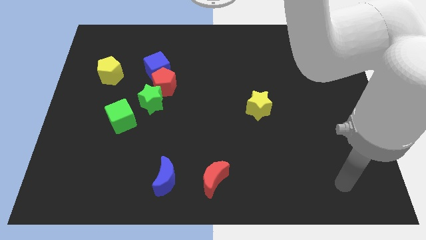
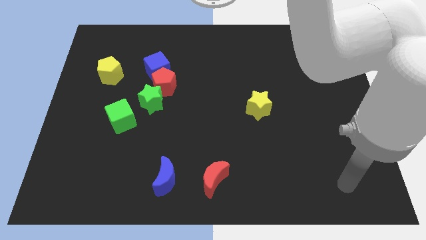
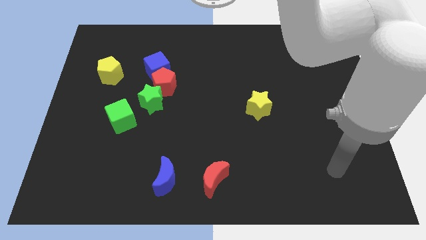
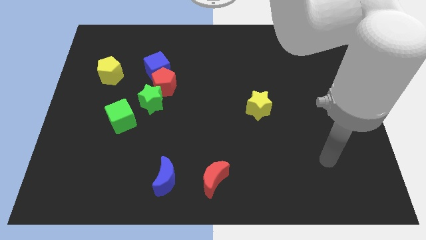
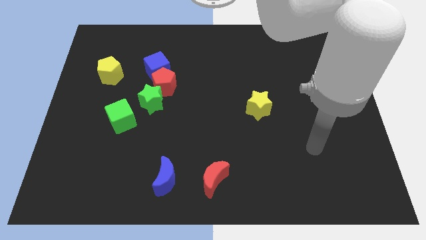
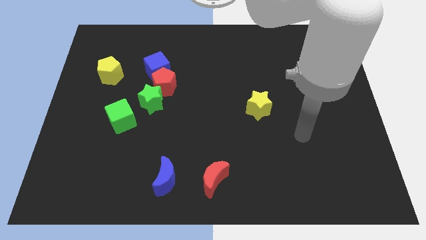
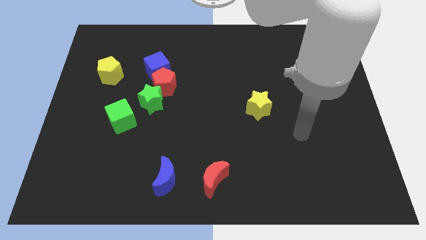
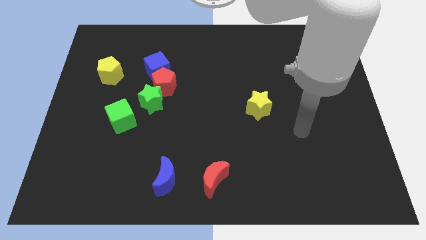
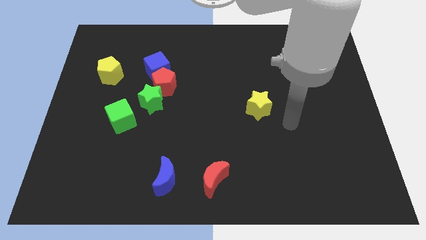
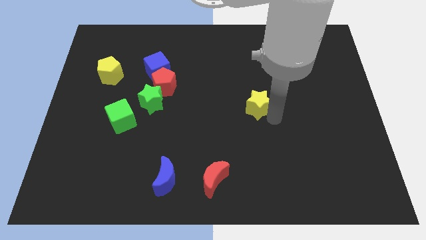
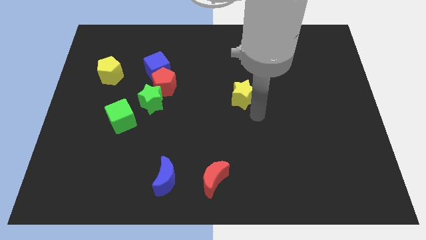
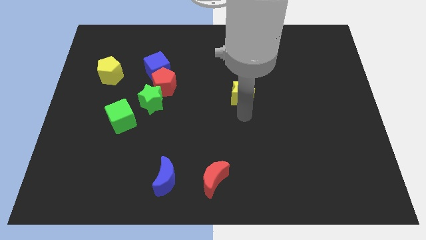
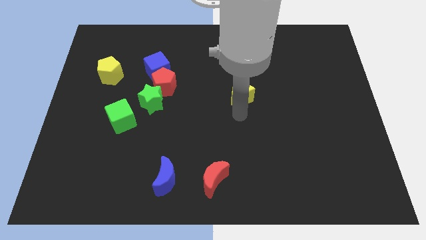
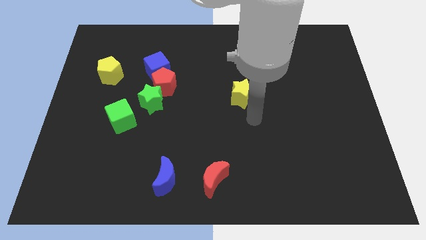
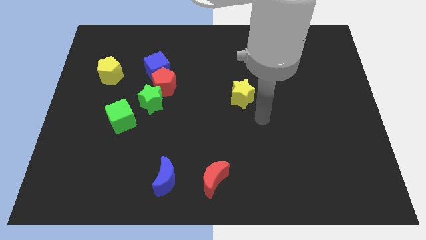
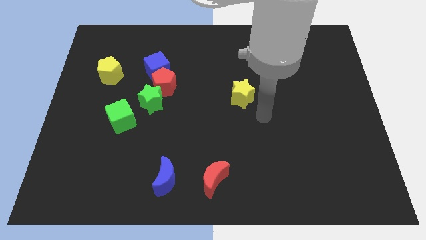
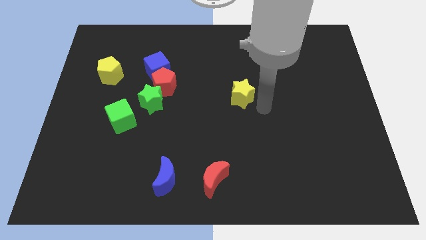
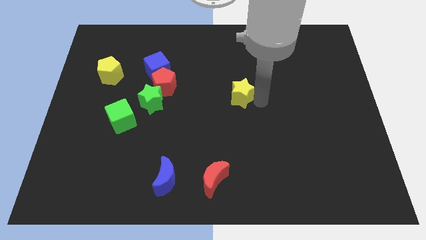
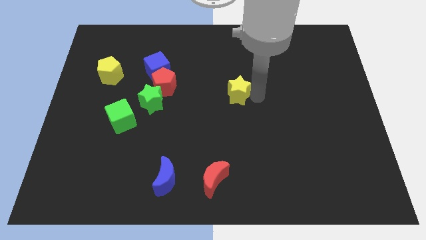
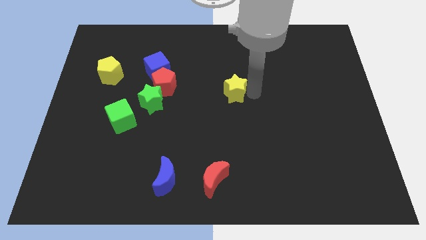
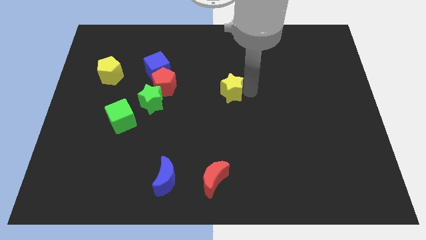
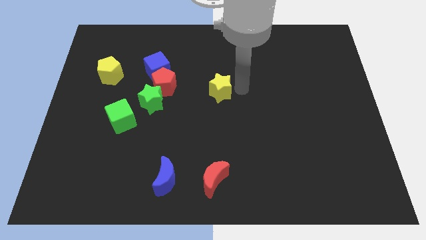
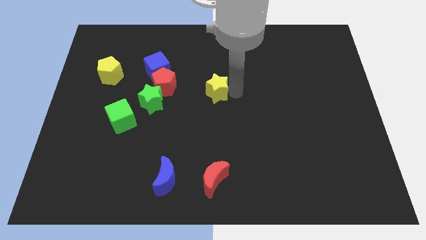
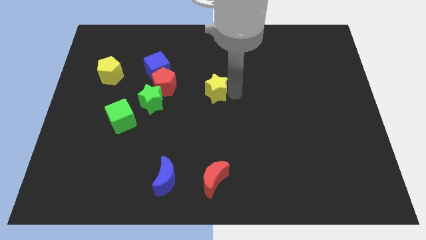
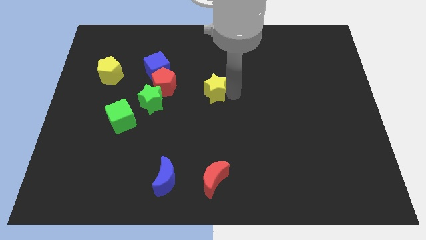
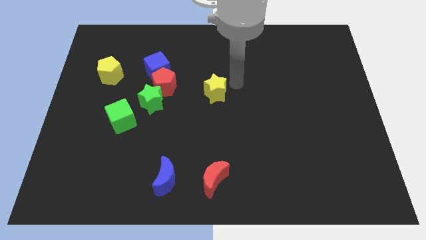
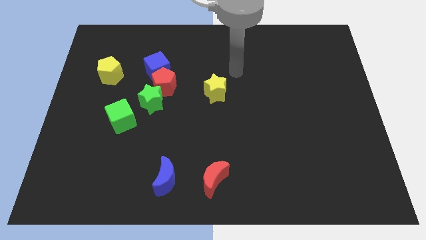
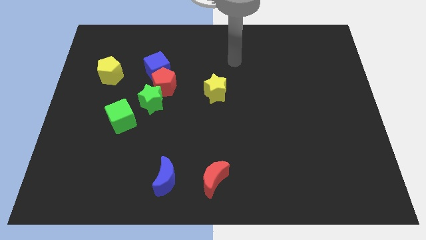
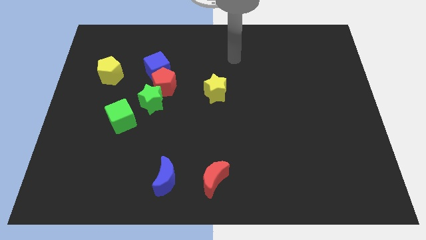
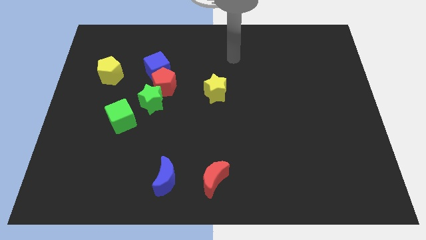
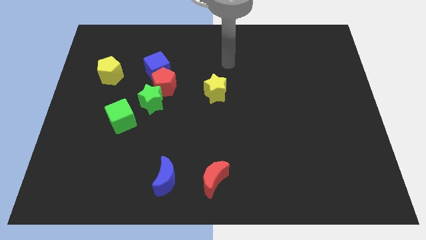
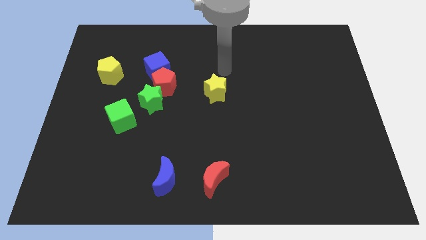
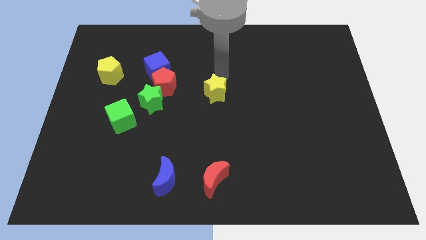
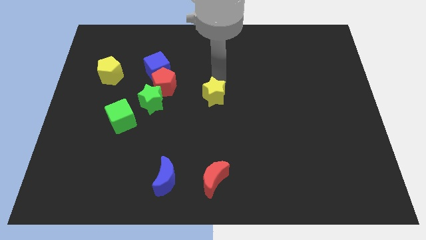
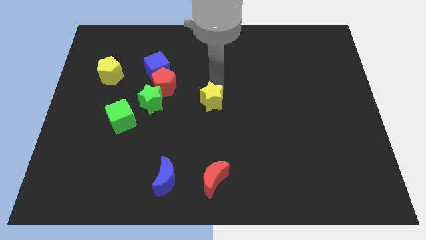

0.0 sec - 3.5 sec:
place the yellow star at center of the board

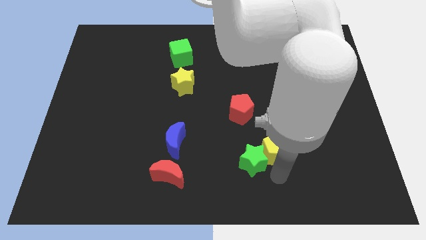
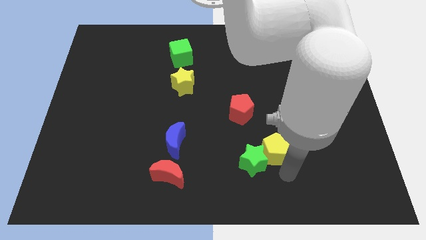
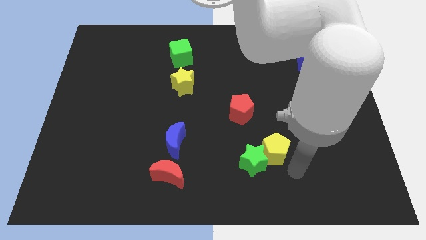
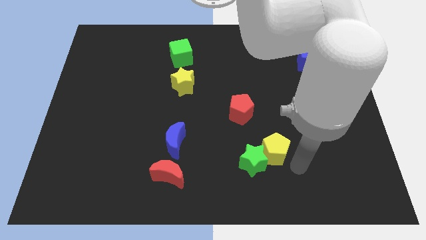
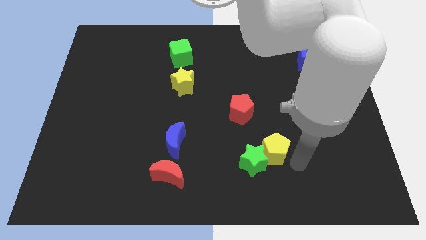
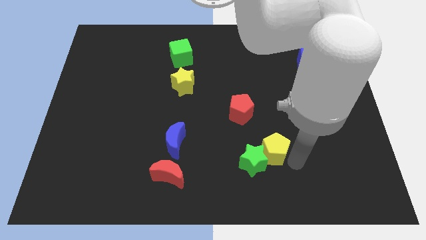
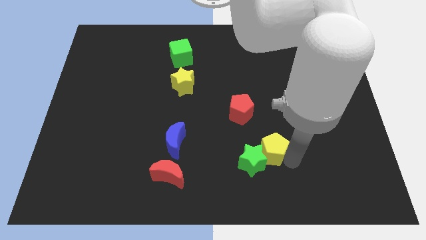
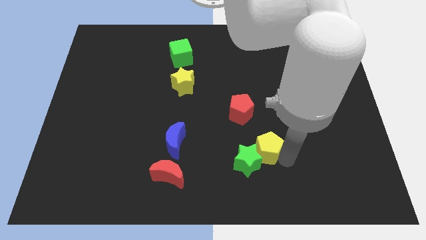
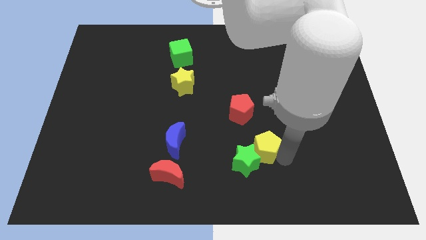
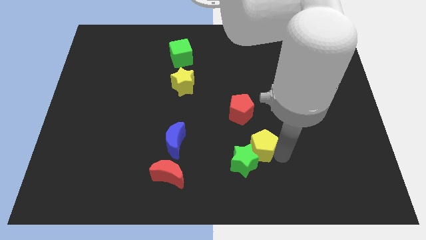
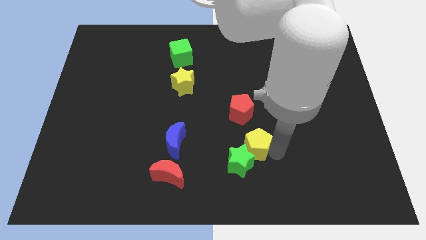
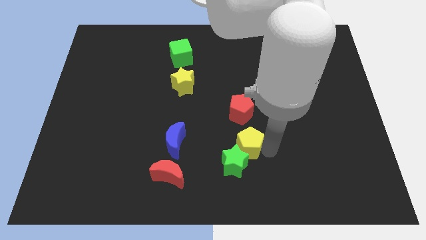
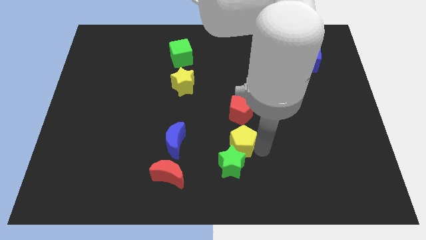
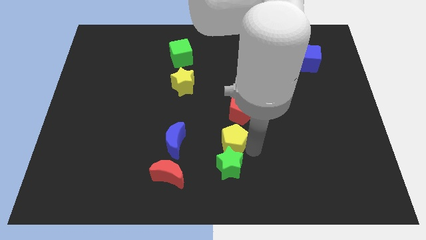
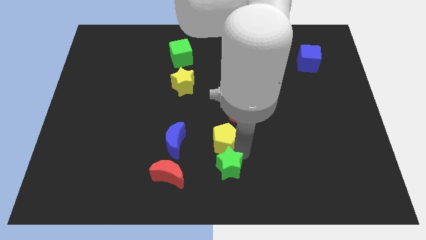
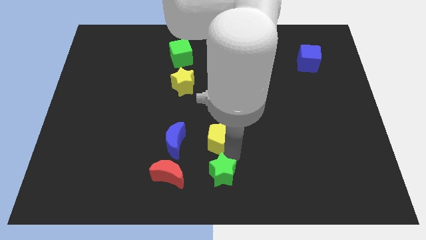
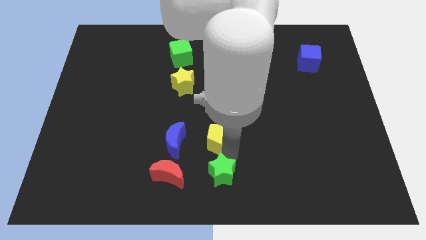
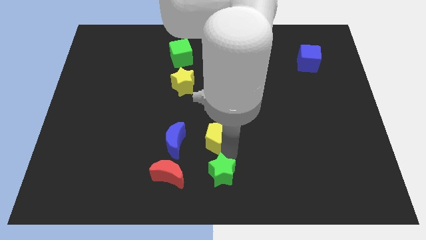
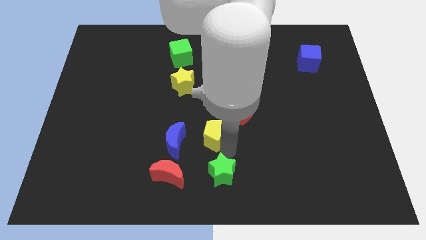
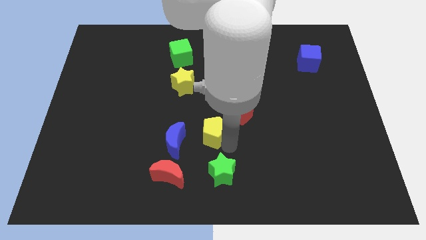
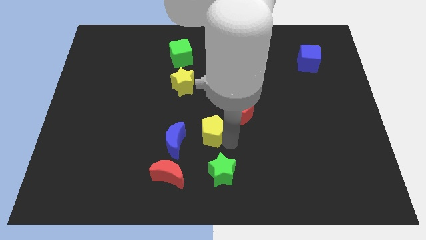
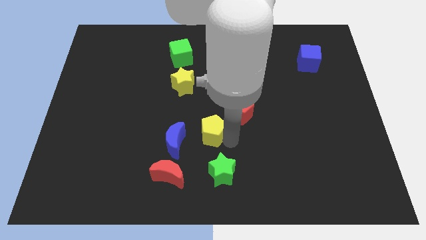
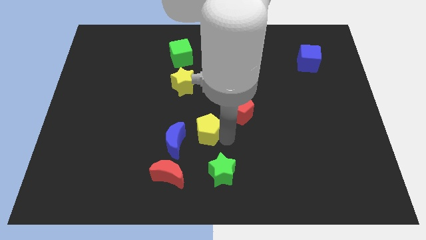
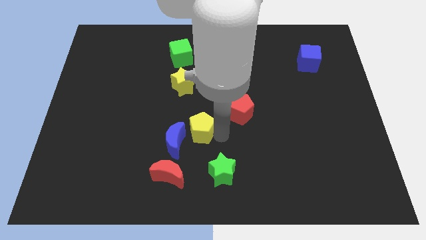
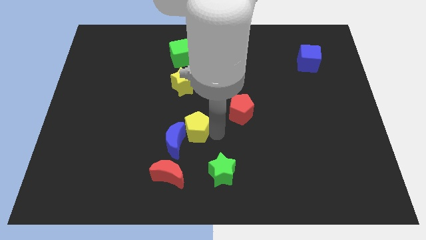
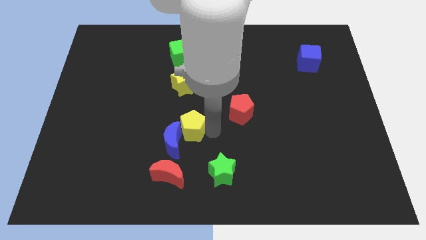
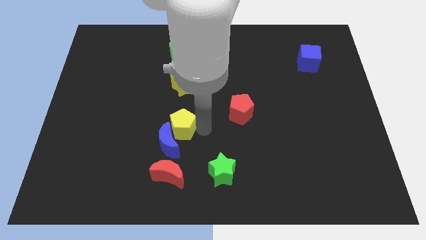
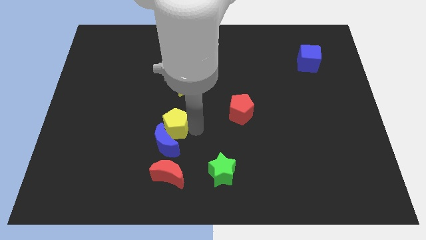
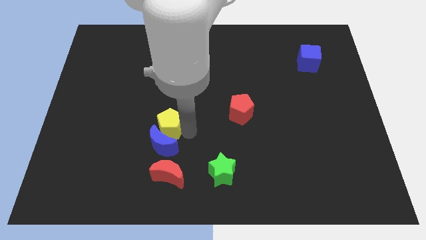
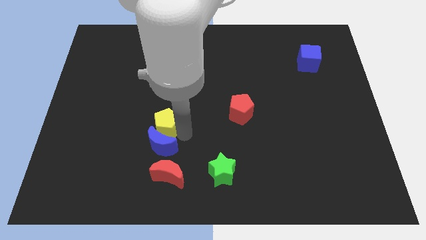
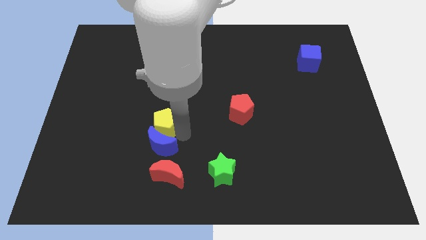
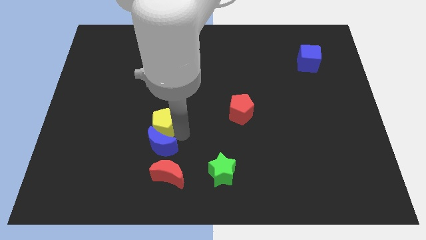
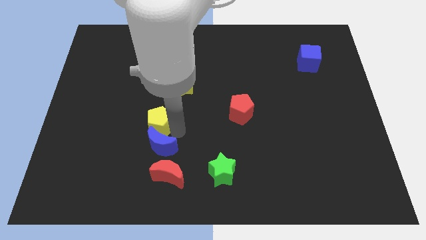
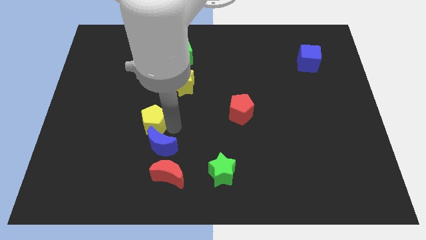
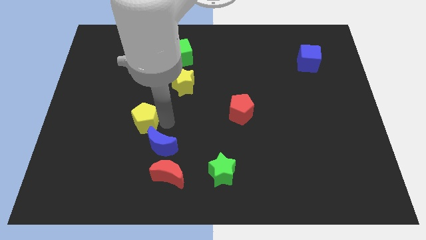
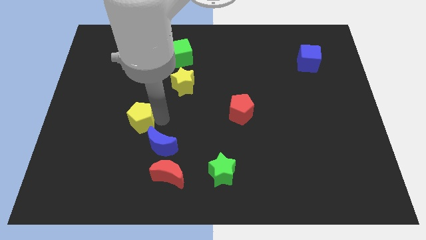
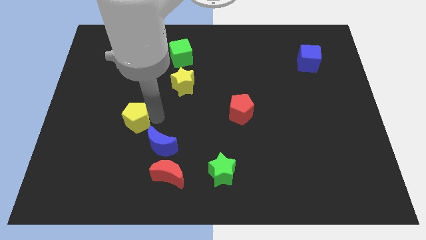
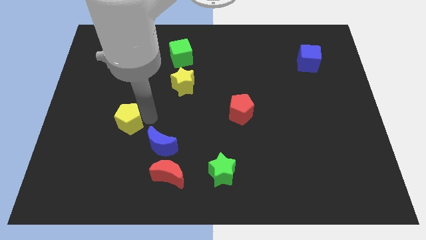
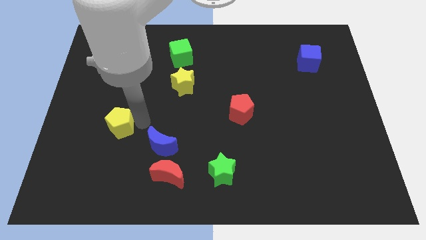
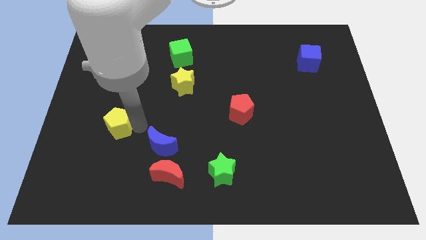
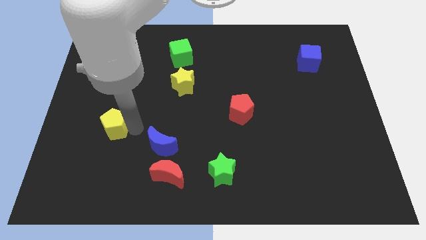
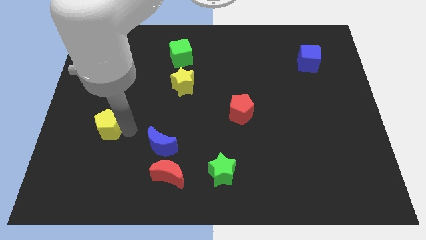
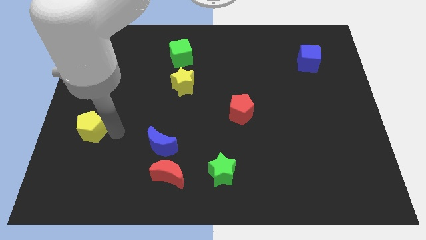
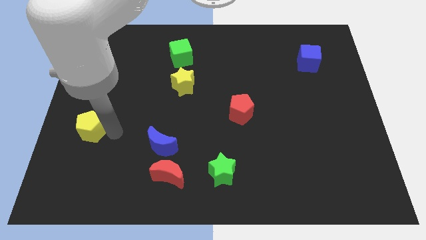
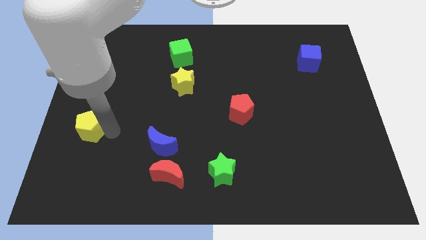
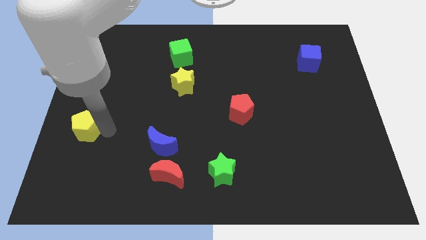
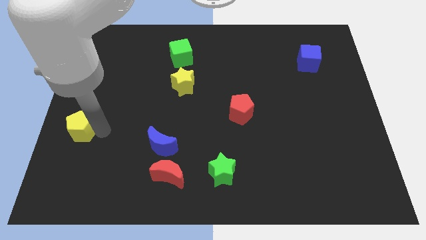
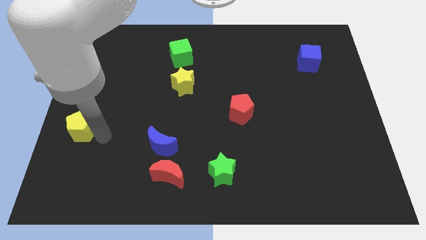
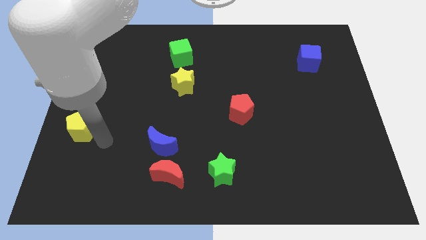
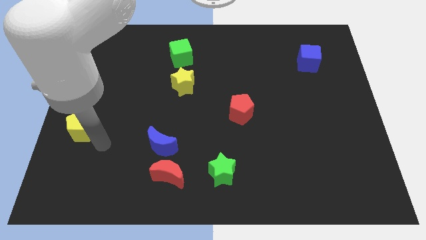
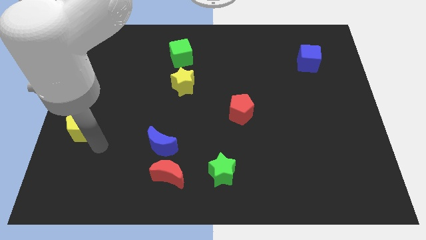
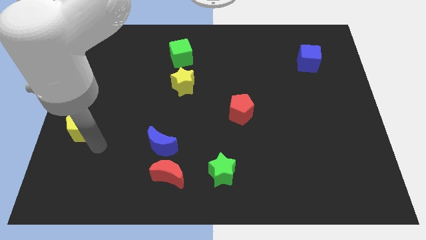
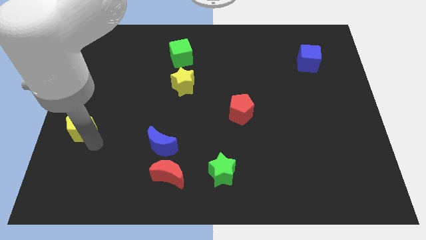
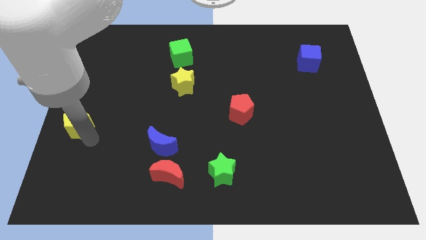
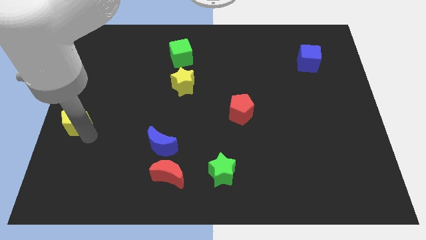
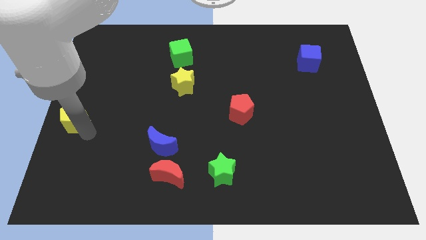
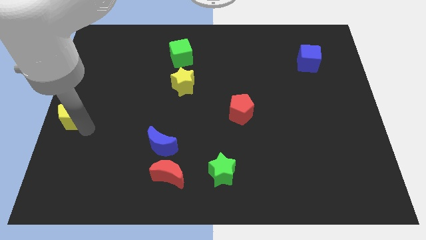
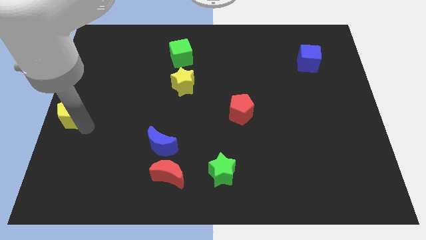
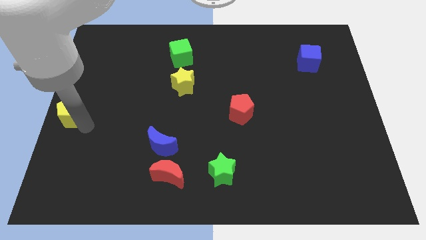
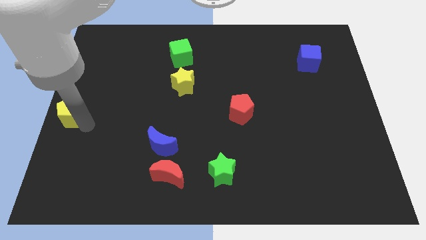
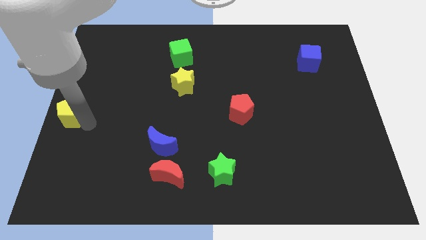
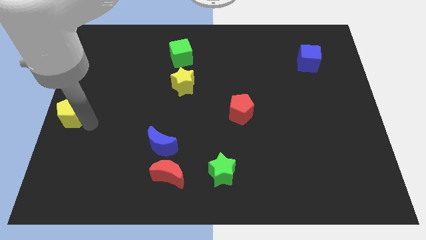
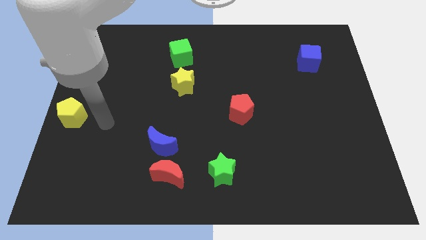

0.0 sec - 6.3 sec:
move the yellow pentagon towards the center left
